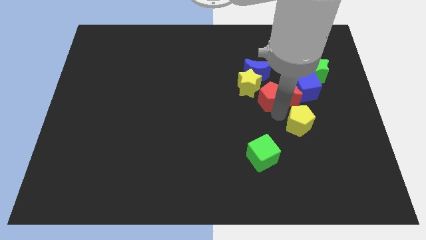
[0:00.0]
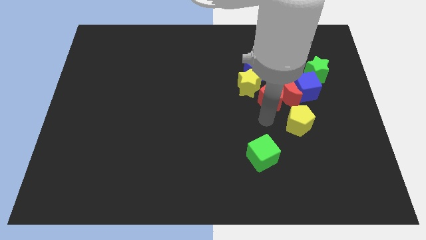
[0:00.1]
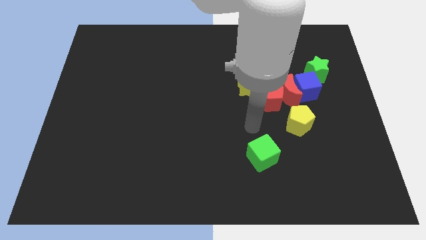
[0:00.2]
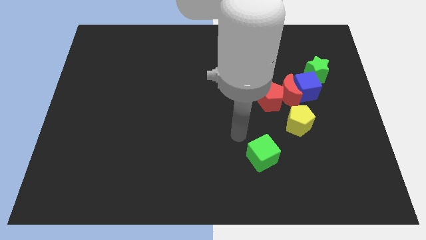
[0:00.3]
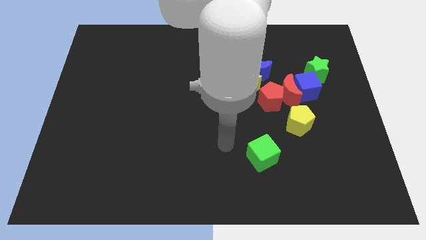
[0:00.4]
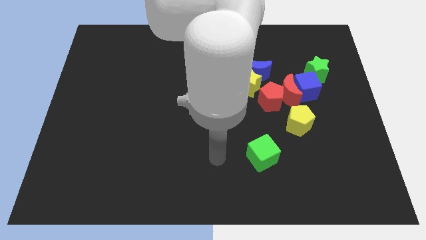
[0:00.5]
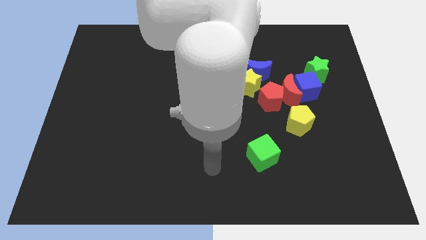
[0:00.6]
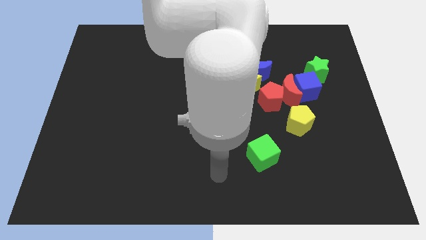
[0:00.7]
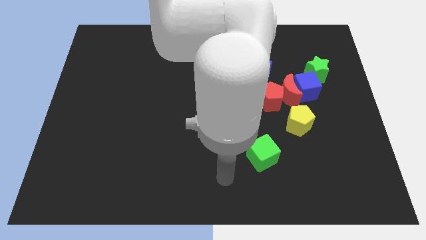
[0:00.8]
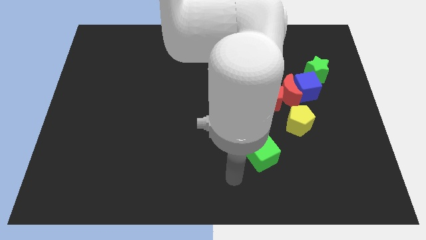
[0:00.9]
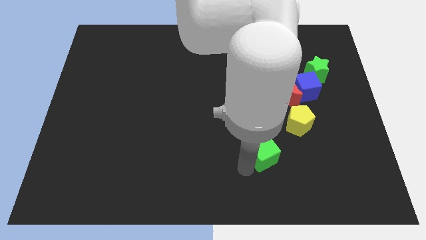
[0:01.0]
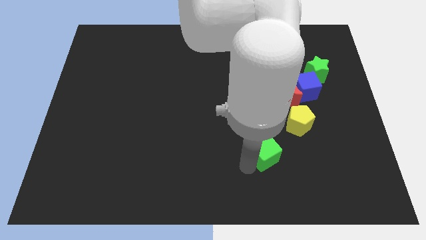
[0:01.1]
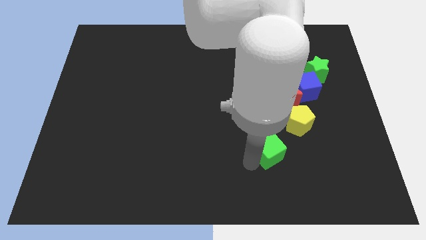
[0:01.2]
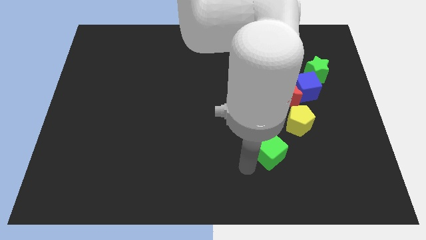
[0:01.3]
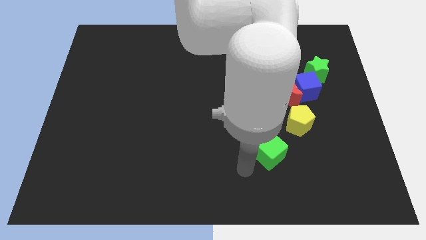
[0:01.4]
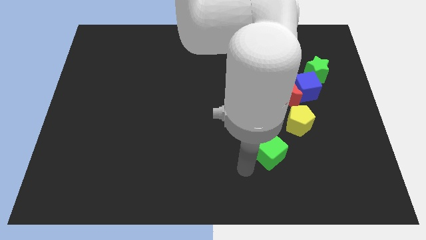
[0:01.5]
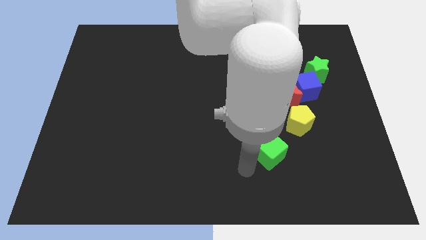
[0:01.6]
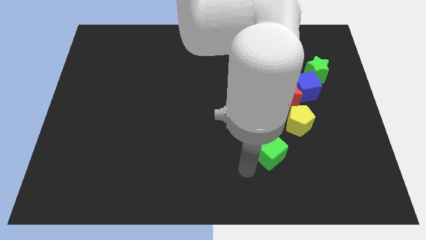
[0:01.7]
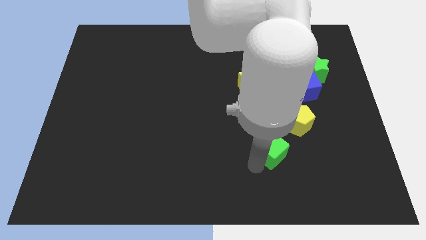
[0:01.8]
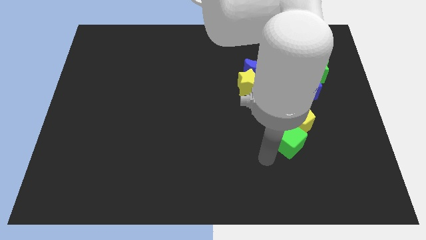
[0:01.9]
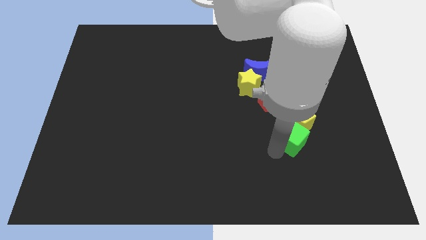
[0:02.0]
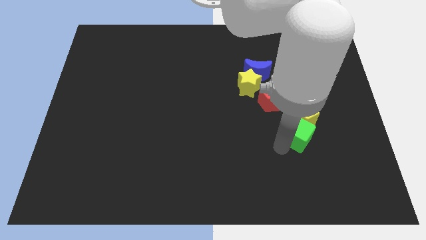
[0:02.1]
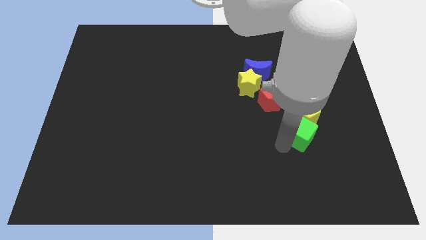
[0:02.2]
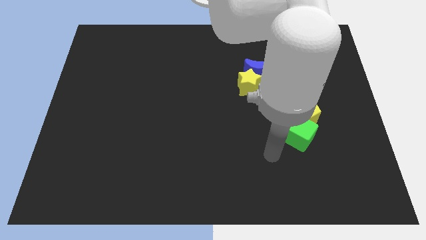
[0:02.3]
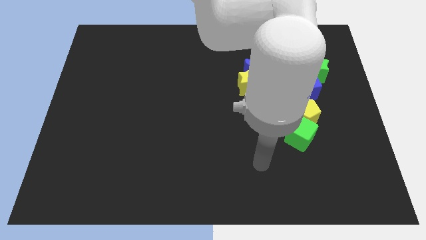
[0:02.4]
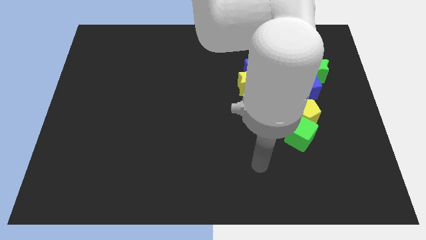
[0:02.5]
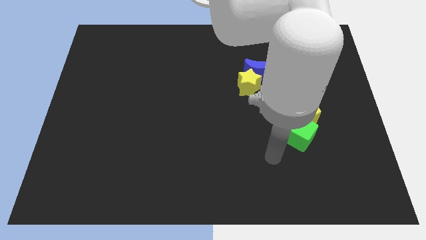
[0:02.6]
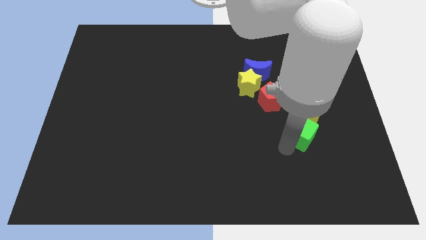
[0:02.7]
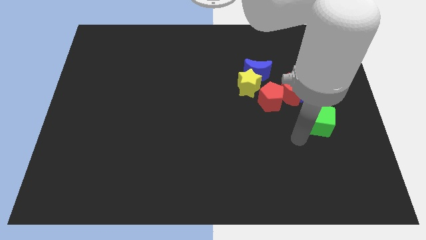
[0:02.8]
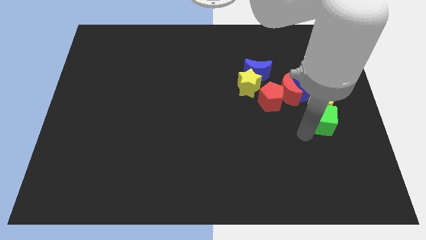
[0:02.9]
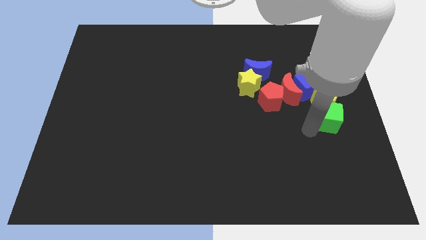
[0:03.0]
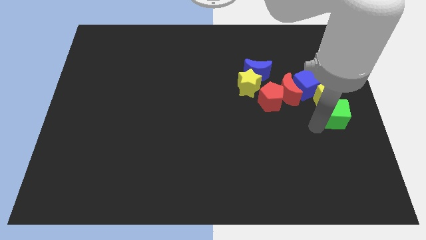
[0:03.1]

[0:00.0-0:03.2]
push the green cube into the yellow pentagon

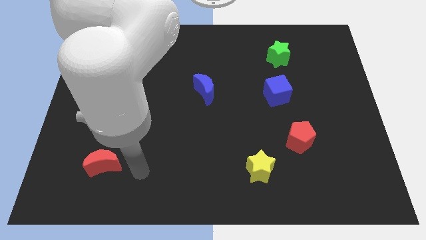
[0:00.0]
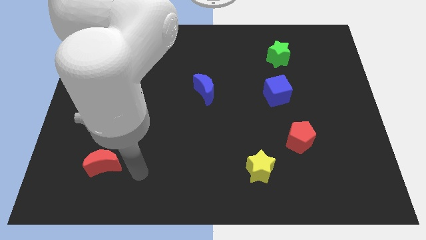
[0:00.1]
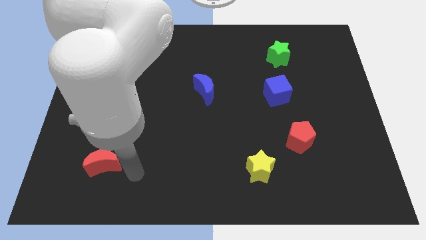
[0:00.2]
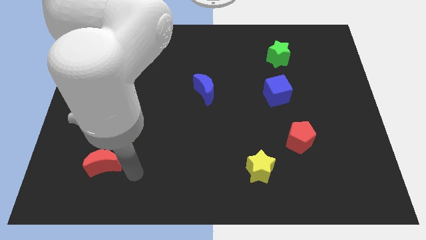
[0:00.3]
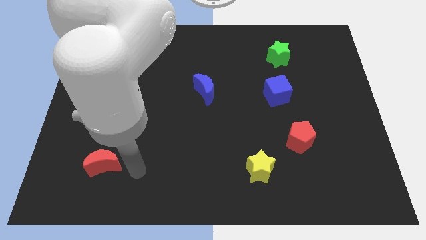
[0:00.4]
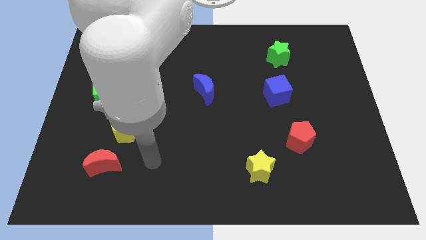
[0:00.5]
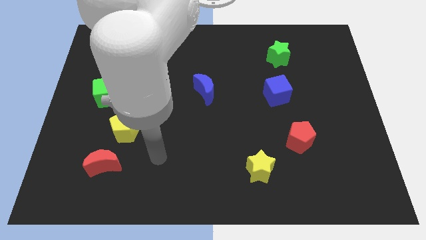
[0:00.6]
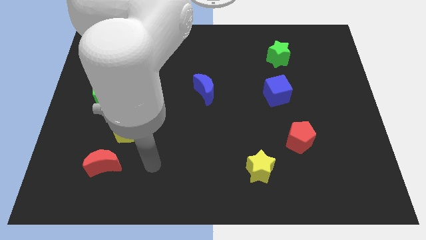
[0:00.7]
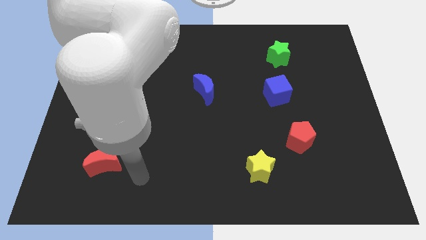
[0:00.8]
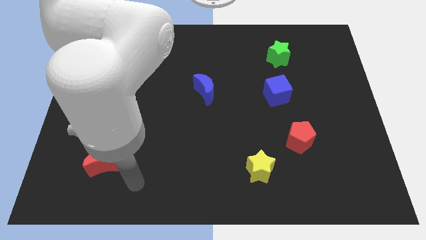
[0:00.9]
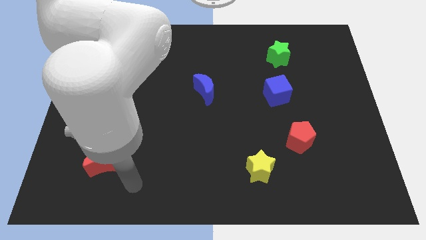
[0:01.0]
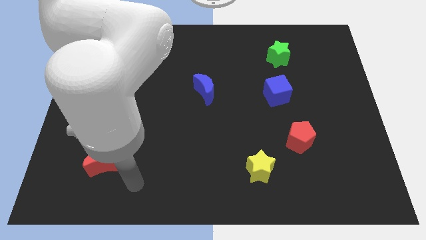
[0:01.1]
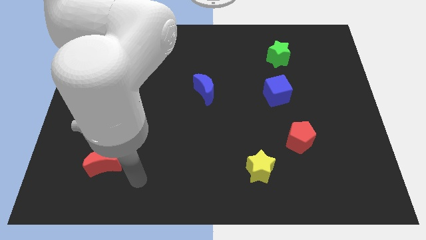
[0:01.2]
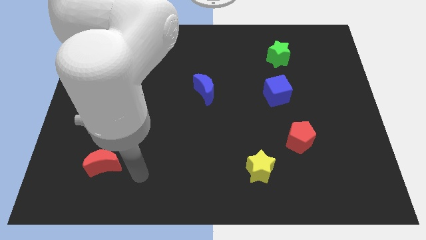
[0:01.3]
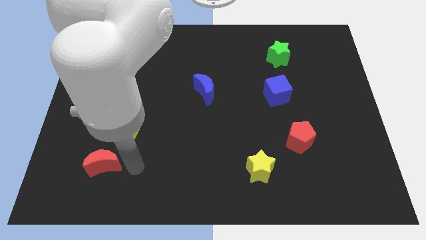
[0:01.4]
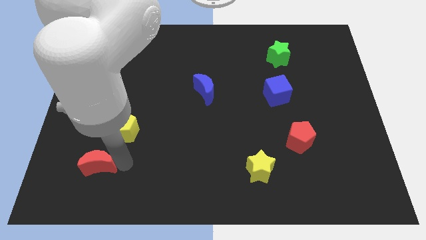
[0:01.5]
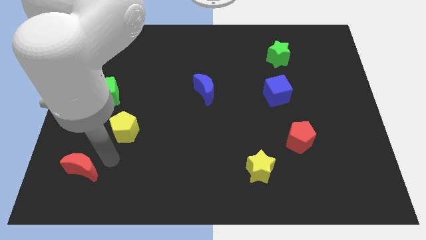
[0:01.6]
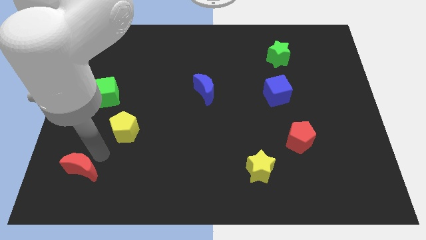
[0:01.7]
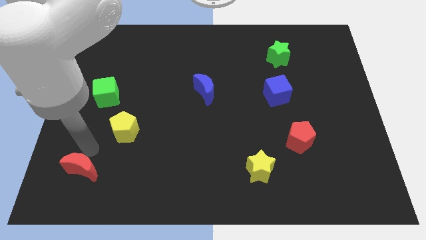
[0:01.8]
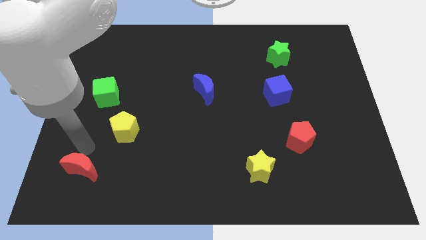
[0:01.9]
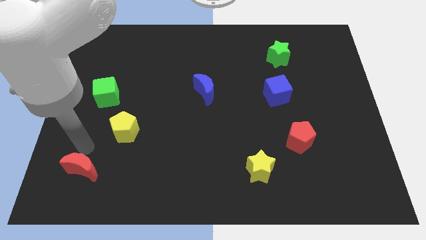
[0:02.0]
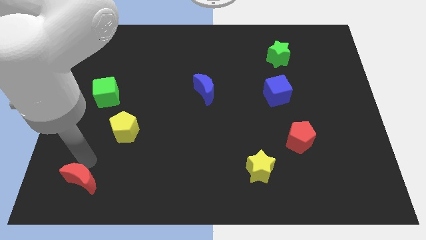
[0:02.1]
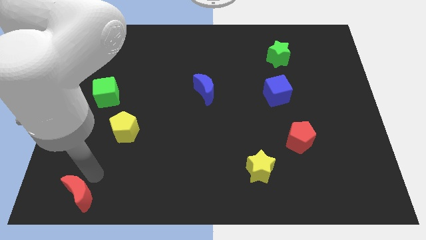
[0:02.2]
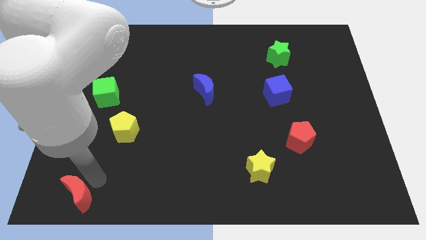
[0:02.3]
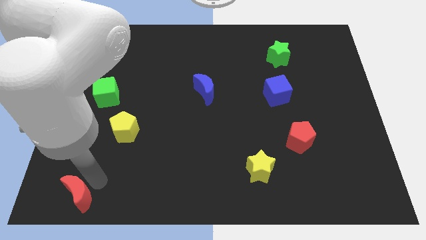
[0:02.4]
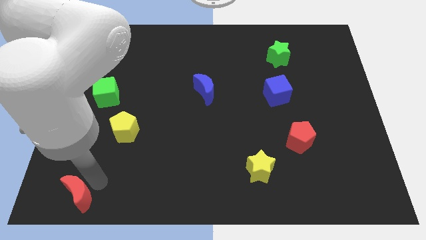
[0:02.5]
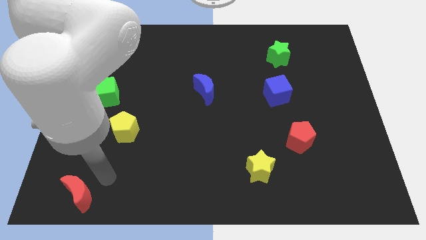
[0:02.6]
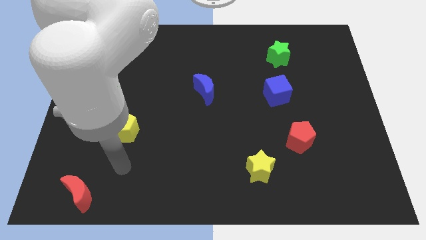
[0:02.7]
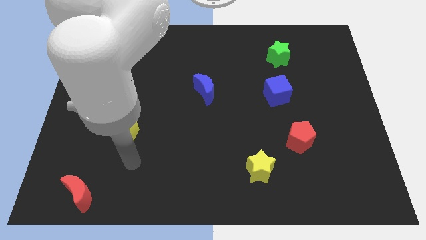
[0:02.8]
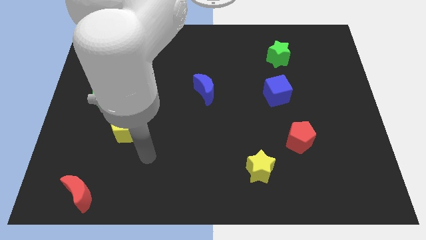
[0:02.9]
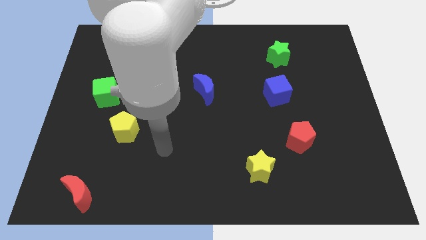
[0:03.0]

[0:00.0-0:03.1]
place the red crescent diagonally below the bottom left side of the yellow pentagon

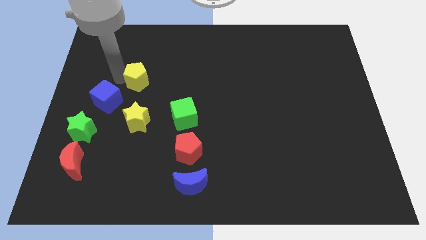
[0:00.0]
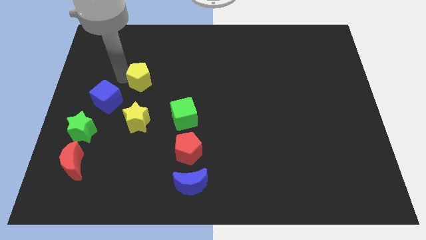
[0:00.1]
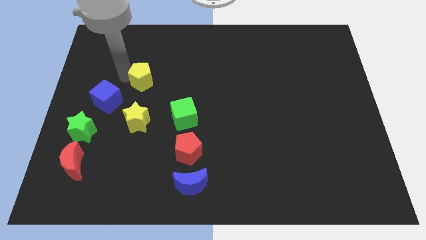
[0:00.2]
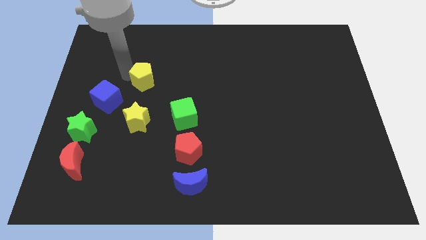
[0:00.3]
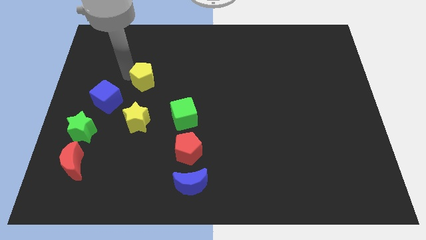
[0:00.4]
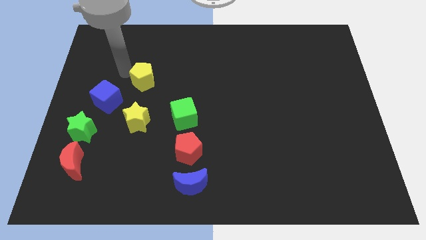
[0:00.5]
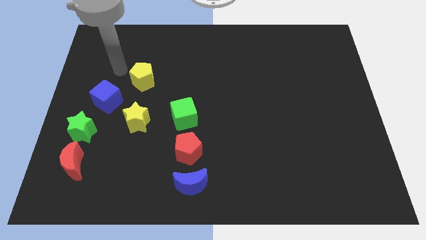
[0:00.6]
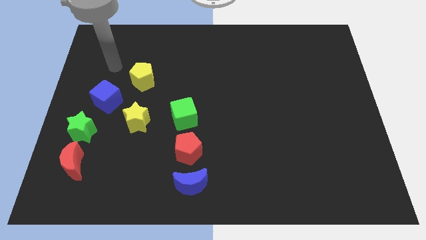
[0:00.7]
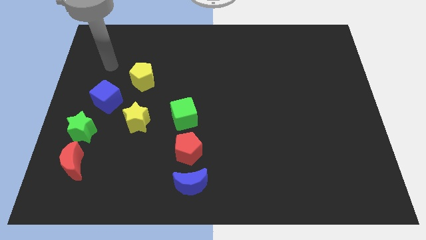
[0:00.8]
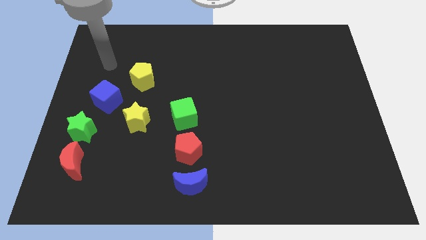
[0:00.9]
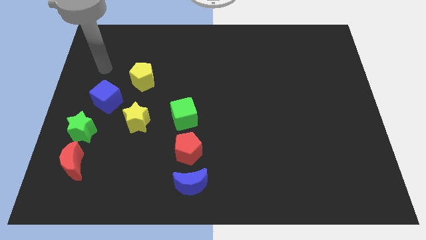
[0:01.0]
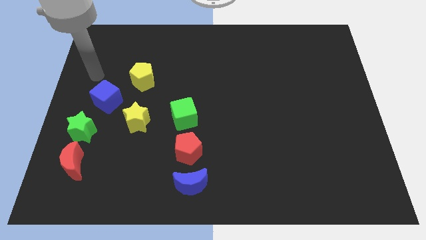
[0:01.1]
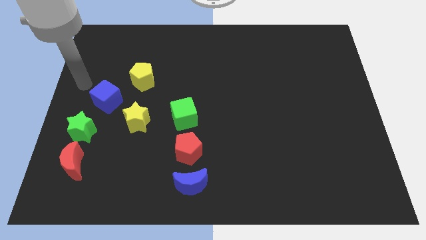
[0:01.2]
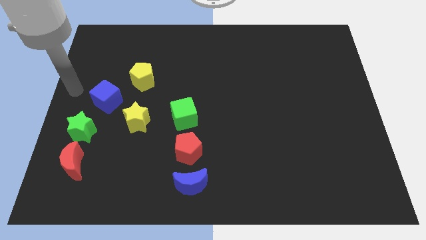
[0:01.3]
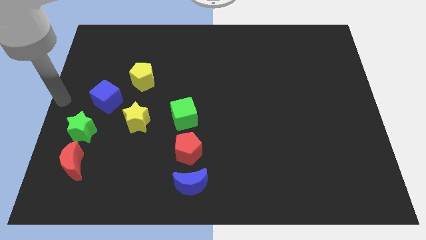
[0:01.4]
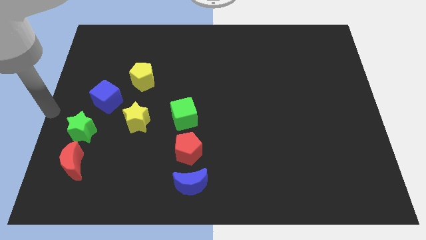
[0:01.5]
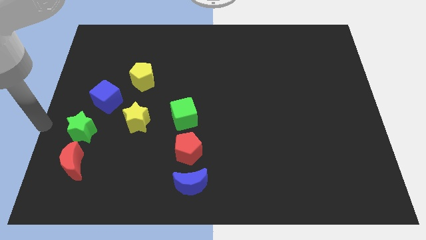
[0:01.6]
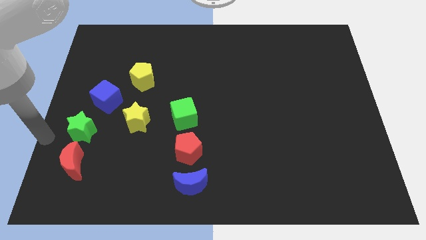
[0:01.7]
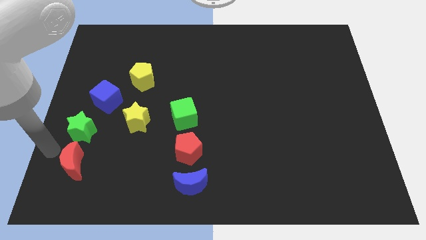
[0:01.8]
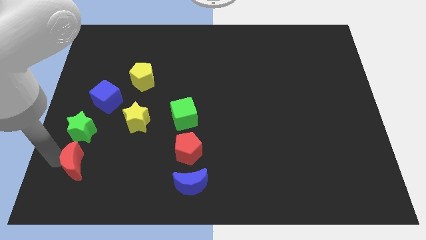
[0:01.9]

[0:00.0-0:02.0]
move your arm away from the yellow pentagon

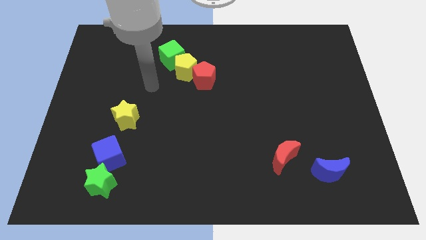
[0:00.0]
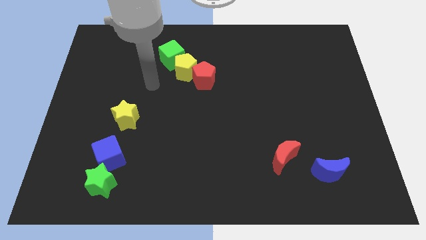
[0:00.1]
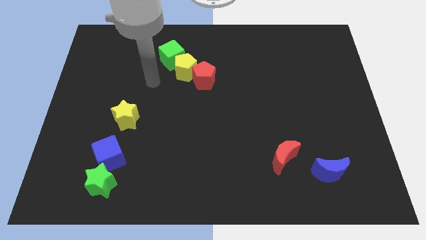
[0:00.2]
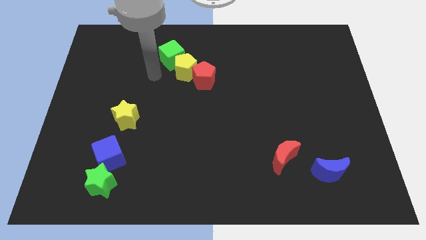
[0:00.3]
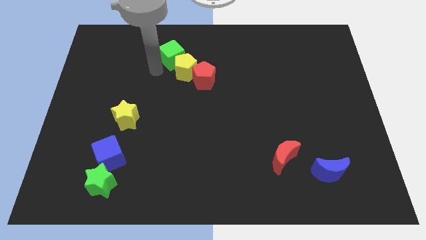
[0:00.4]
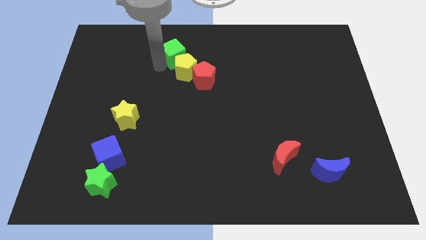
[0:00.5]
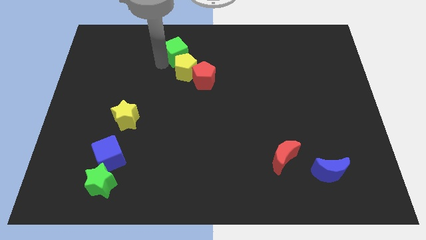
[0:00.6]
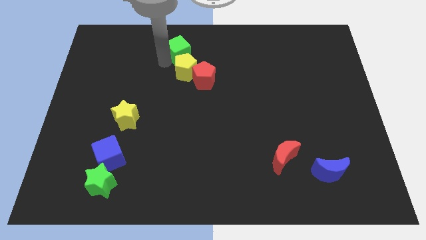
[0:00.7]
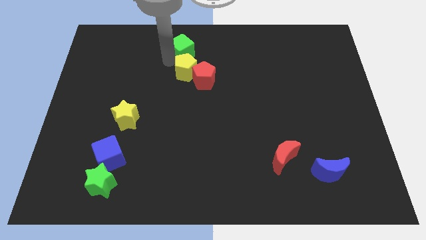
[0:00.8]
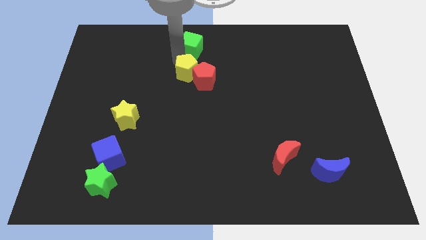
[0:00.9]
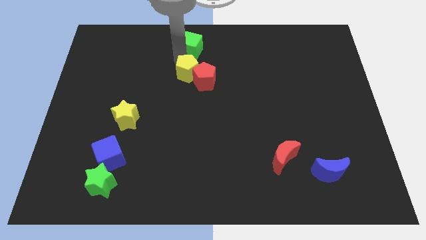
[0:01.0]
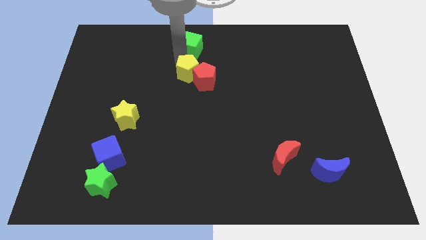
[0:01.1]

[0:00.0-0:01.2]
place green cube to the top of yelloe pentagon
